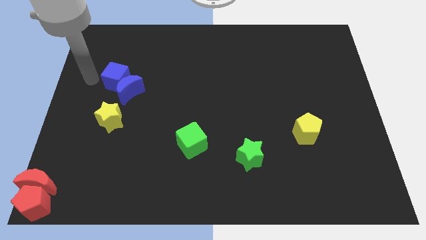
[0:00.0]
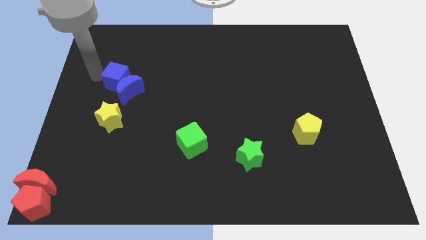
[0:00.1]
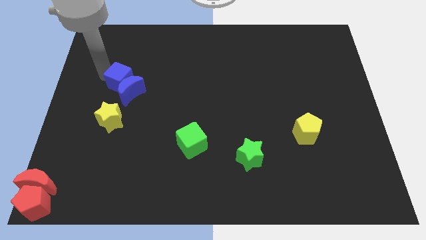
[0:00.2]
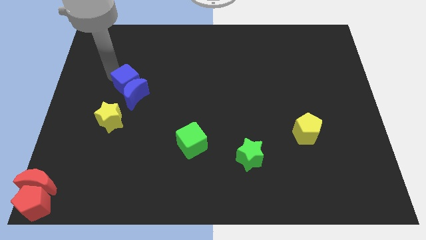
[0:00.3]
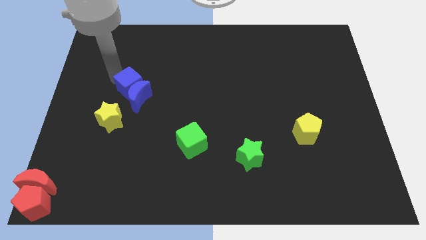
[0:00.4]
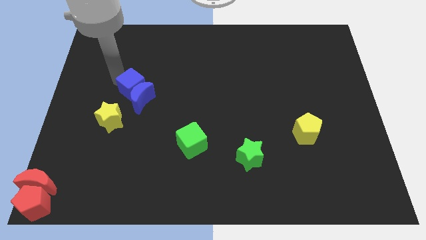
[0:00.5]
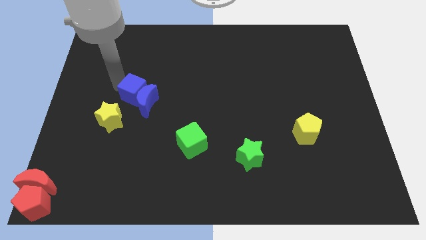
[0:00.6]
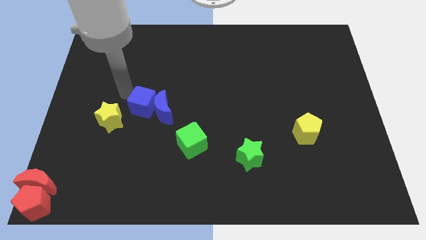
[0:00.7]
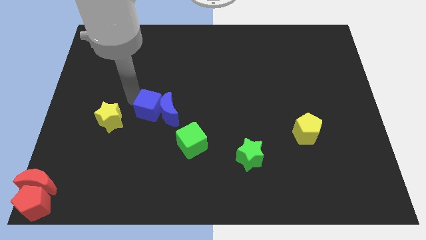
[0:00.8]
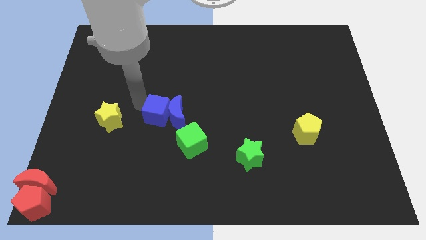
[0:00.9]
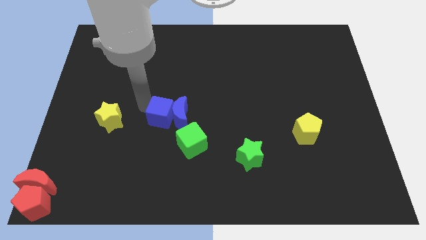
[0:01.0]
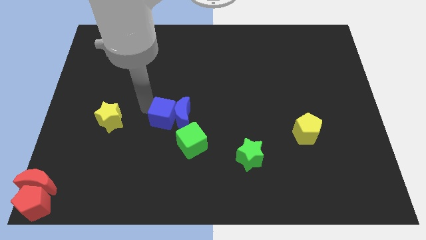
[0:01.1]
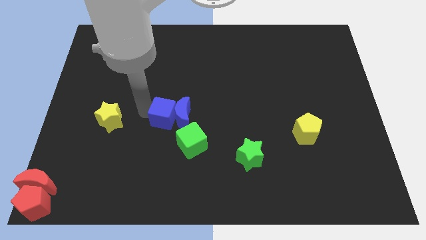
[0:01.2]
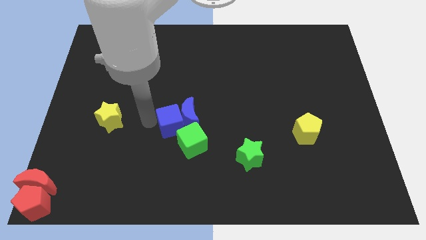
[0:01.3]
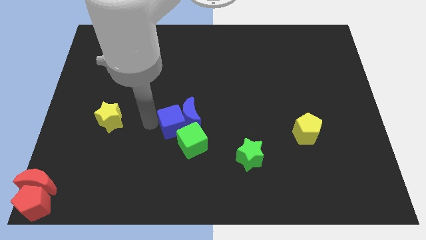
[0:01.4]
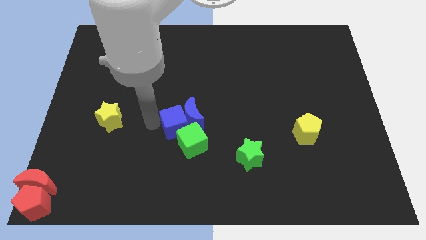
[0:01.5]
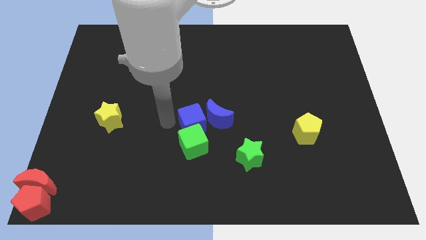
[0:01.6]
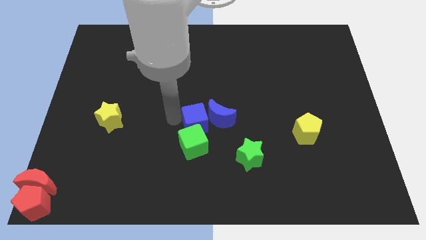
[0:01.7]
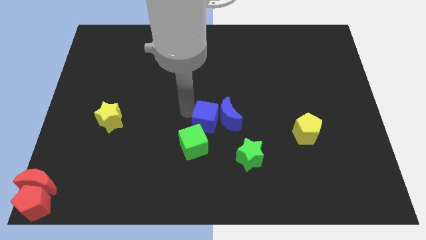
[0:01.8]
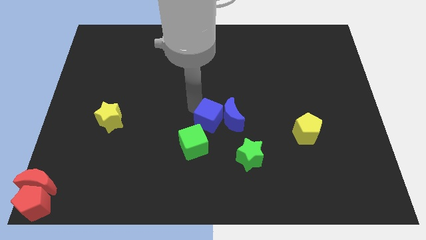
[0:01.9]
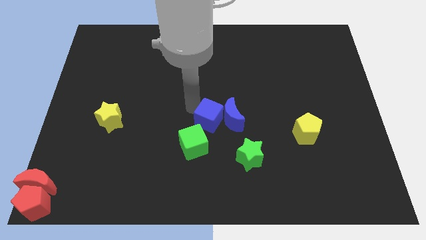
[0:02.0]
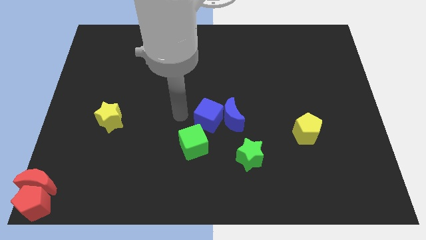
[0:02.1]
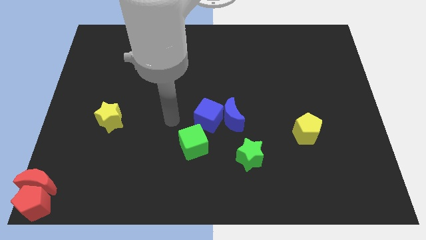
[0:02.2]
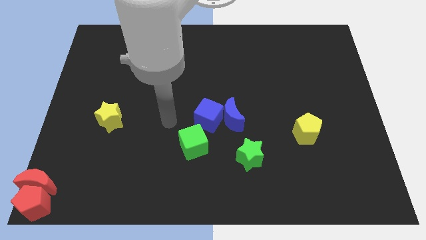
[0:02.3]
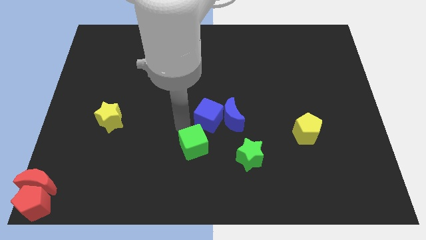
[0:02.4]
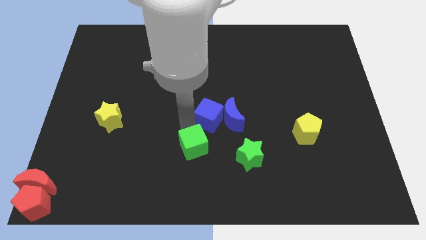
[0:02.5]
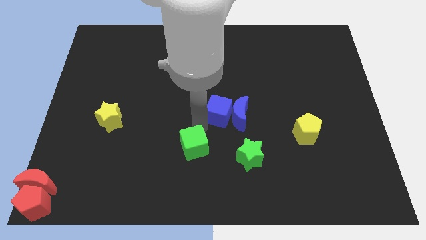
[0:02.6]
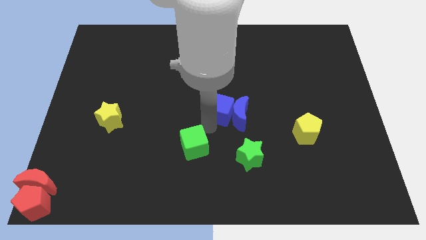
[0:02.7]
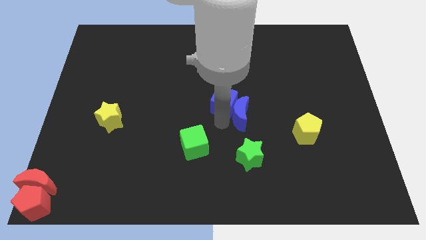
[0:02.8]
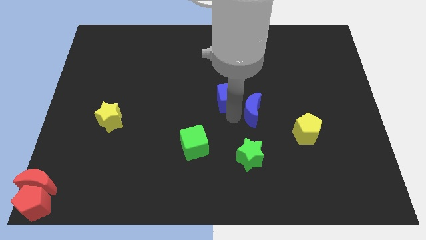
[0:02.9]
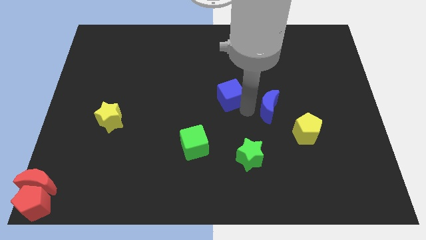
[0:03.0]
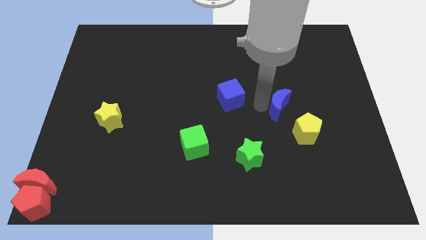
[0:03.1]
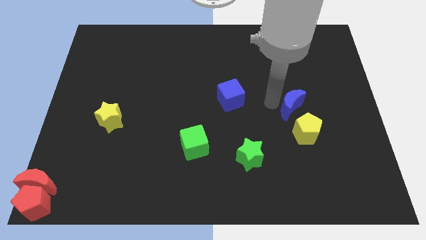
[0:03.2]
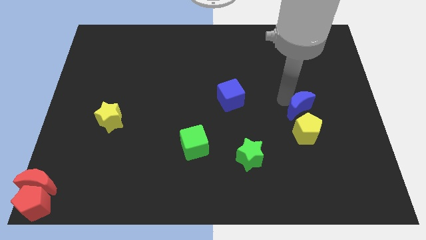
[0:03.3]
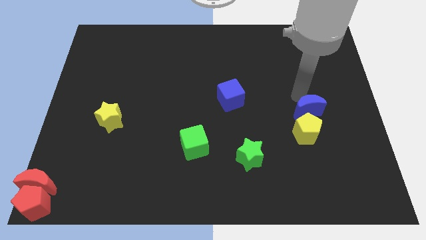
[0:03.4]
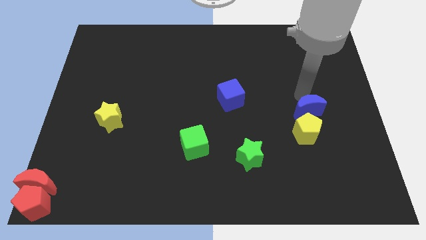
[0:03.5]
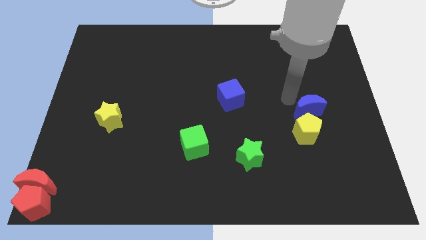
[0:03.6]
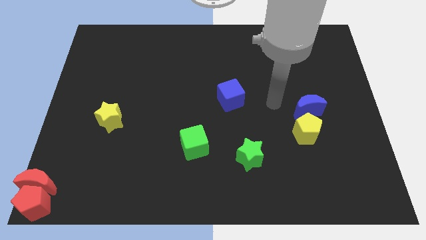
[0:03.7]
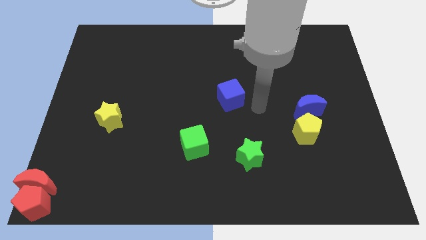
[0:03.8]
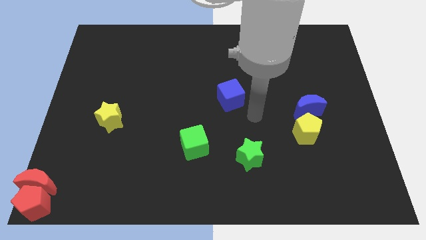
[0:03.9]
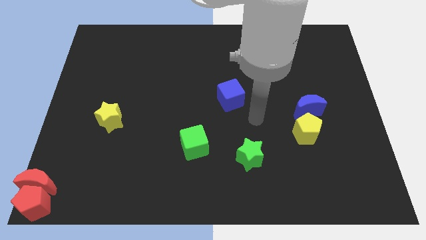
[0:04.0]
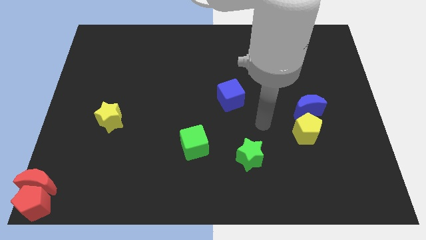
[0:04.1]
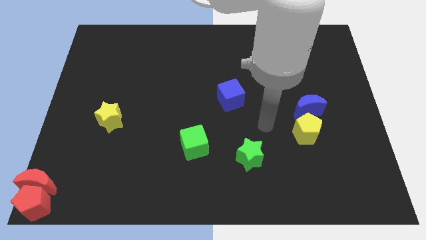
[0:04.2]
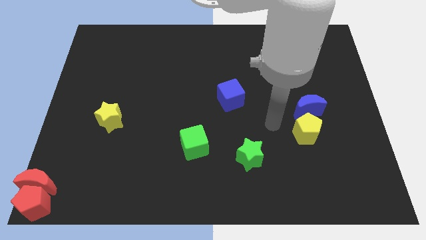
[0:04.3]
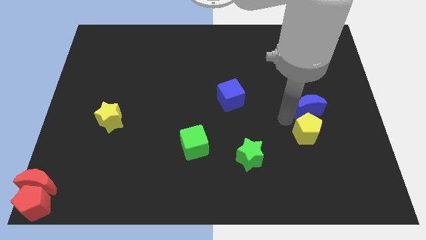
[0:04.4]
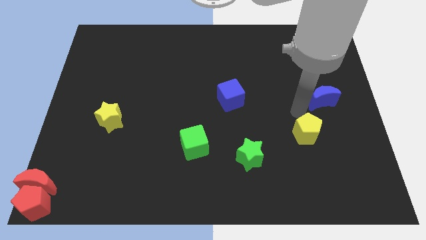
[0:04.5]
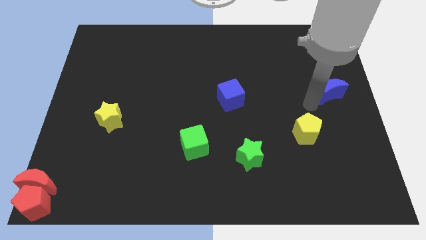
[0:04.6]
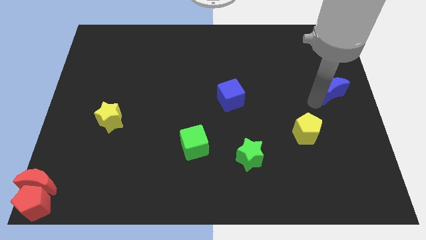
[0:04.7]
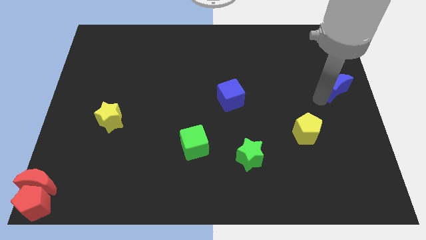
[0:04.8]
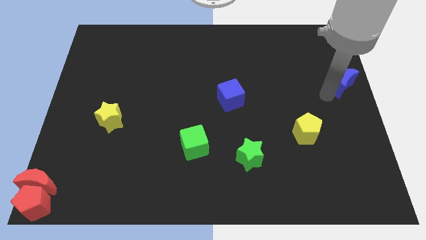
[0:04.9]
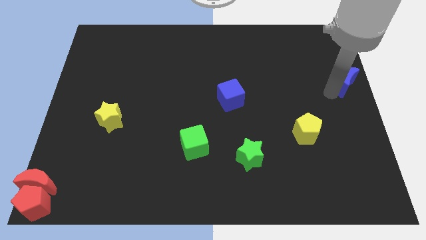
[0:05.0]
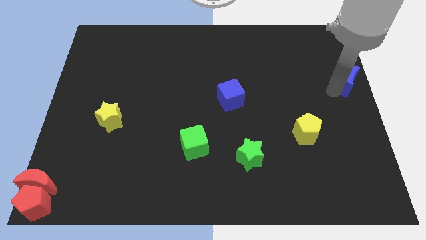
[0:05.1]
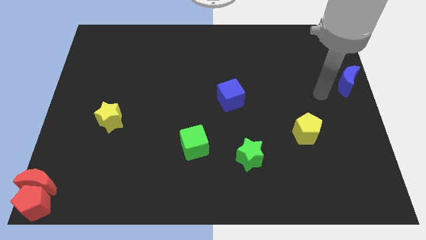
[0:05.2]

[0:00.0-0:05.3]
push the blue crescent towards the right side of the board

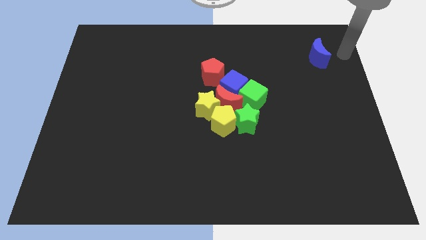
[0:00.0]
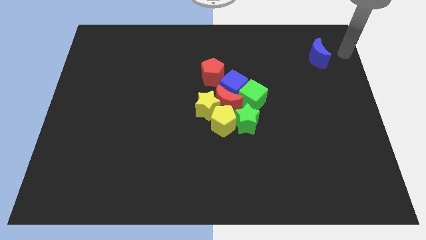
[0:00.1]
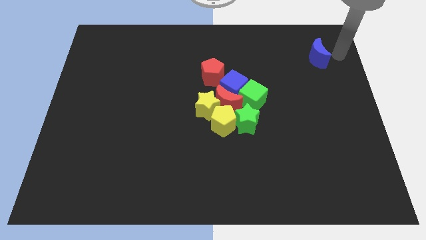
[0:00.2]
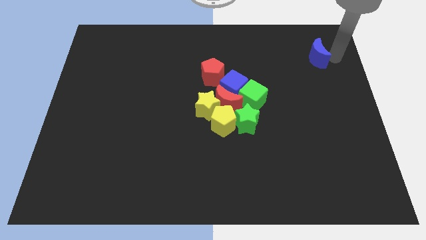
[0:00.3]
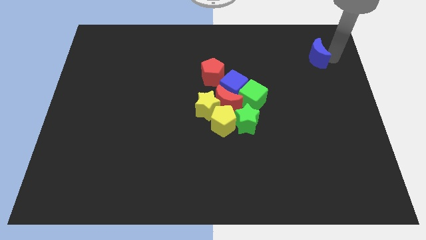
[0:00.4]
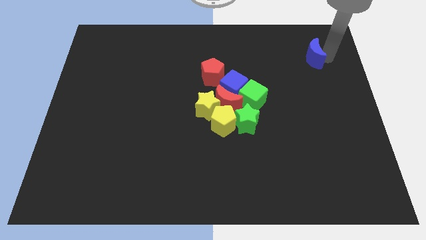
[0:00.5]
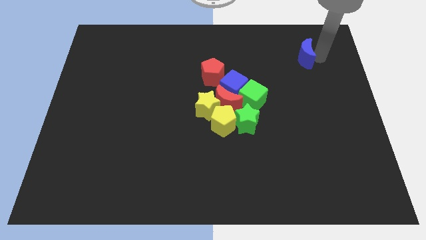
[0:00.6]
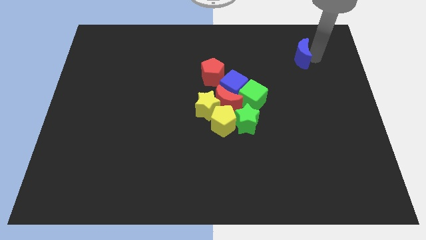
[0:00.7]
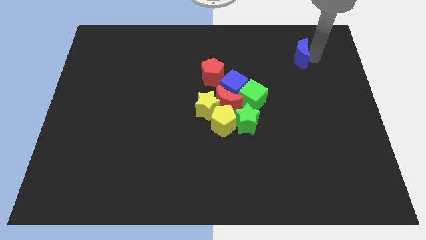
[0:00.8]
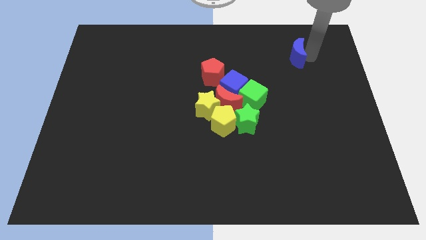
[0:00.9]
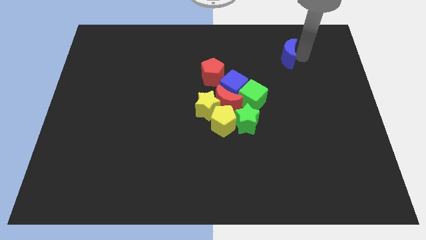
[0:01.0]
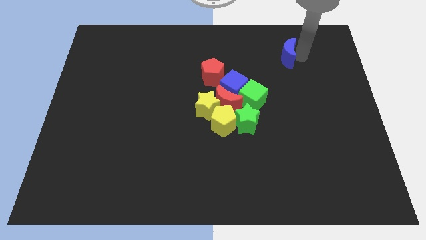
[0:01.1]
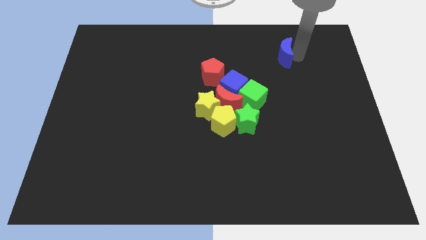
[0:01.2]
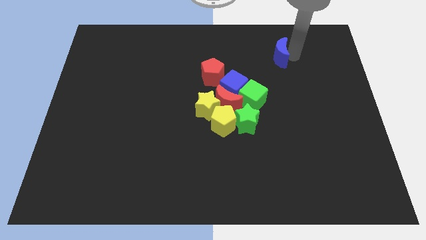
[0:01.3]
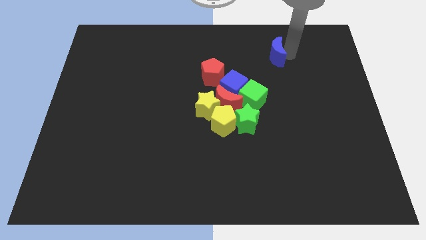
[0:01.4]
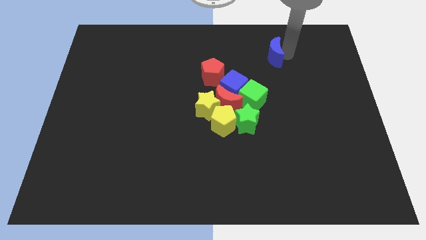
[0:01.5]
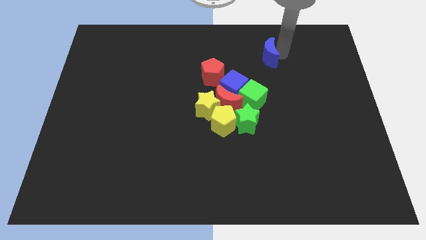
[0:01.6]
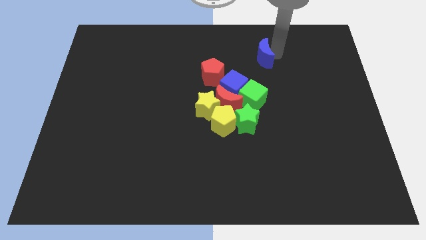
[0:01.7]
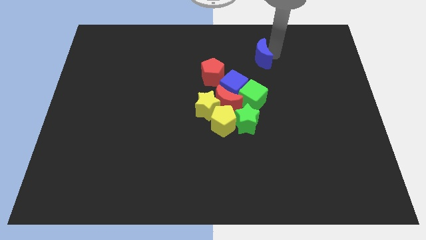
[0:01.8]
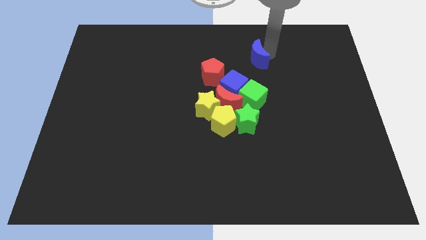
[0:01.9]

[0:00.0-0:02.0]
move the blue crescent to the left

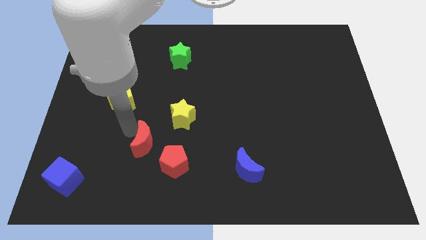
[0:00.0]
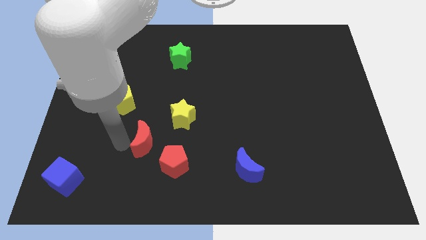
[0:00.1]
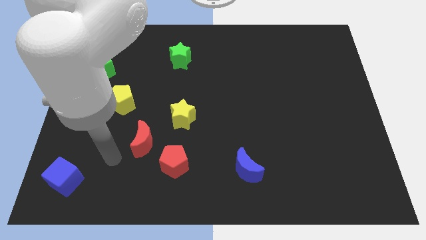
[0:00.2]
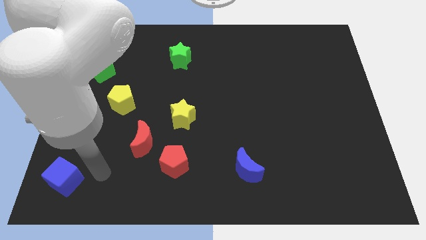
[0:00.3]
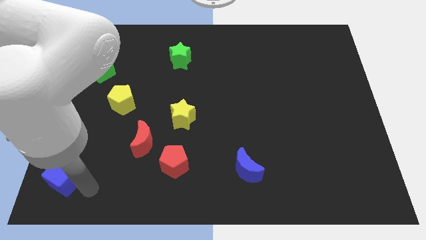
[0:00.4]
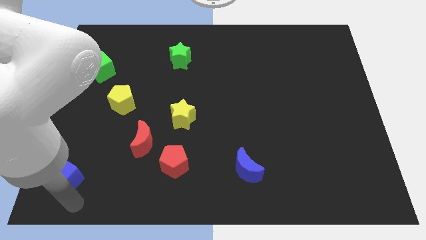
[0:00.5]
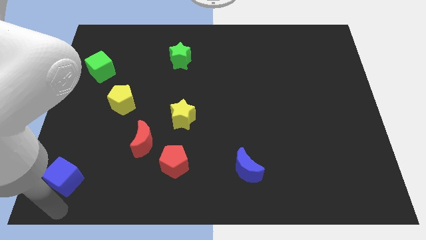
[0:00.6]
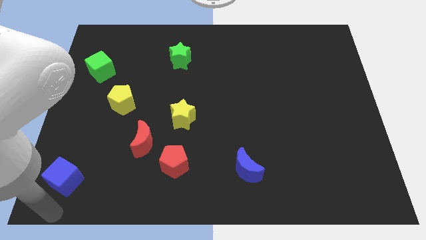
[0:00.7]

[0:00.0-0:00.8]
place your arm at the bottom of blue cube

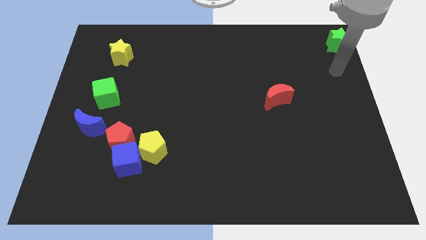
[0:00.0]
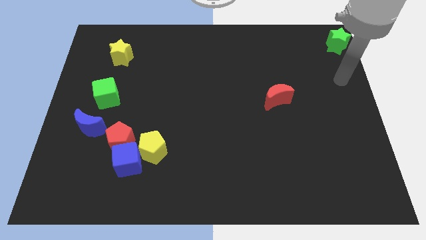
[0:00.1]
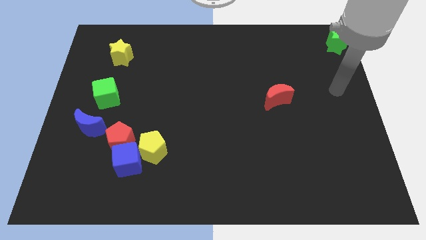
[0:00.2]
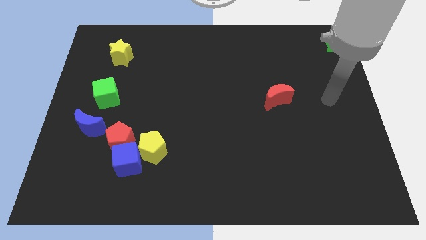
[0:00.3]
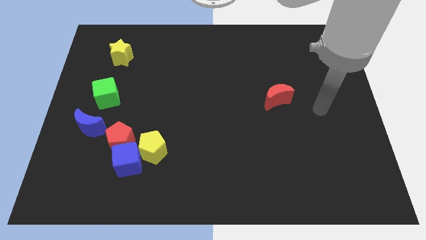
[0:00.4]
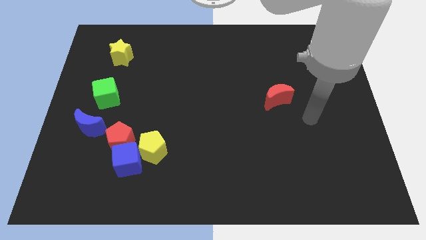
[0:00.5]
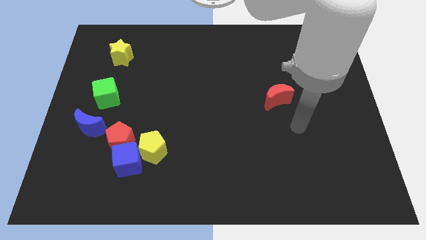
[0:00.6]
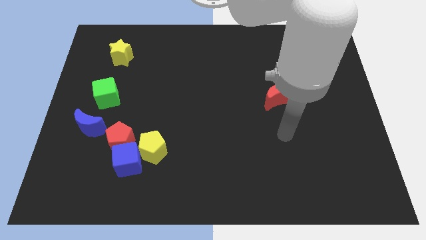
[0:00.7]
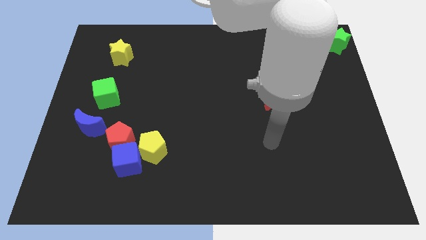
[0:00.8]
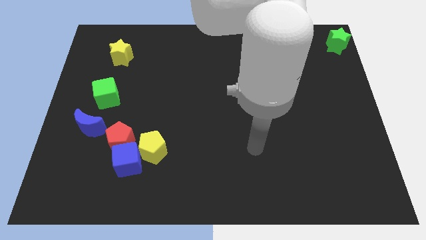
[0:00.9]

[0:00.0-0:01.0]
move your arm towards the bottom side of the board
